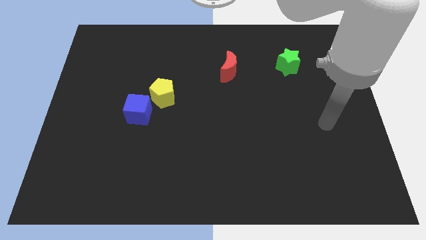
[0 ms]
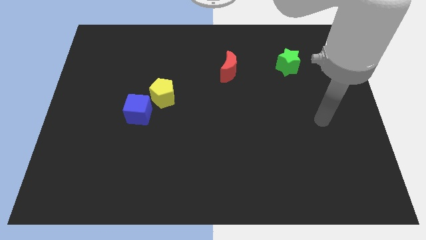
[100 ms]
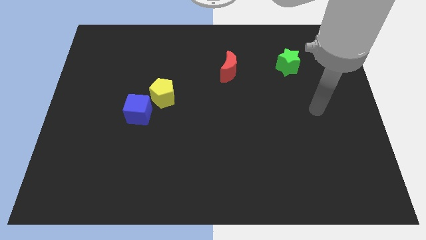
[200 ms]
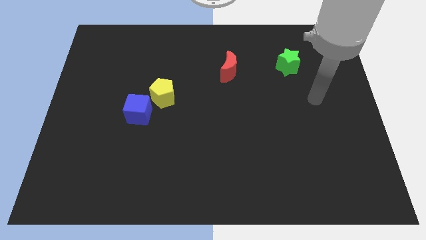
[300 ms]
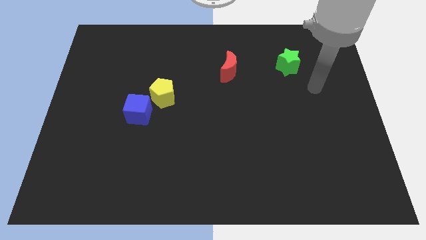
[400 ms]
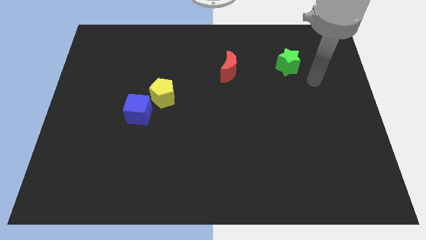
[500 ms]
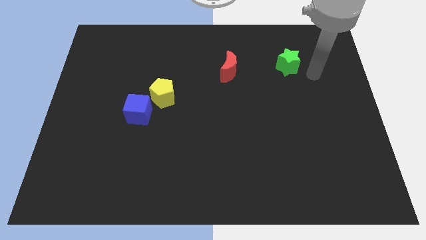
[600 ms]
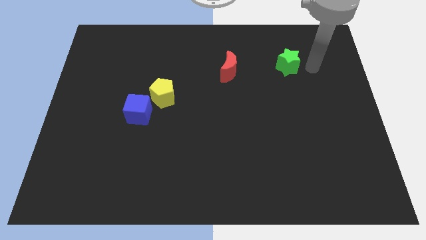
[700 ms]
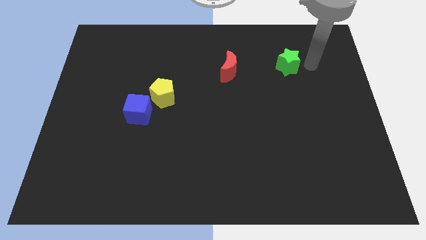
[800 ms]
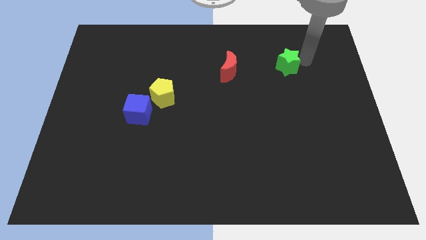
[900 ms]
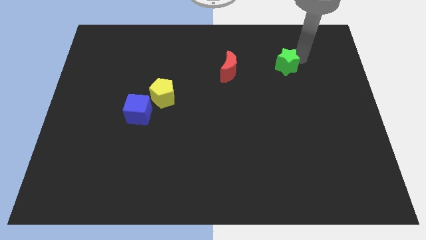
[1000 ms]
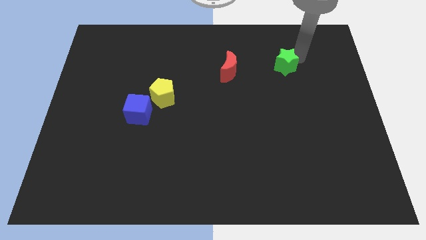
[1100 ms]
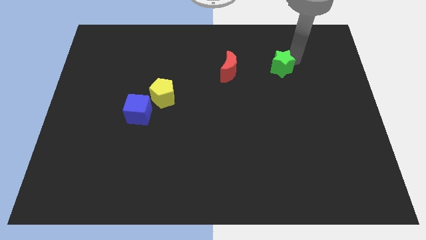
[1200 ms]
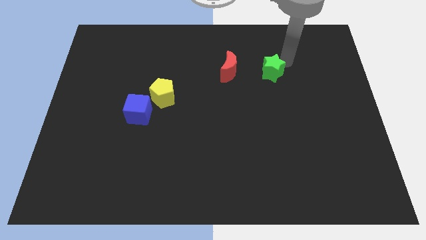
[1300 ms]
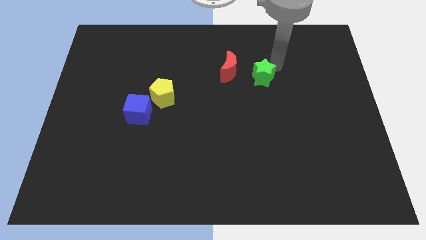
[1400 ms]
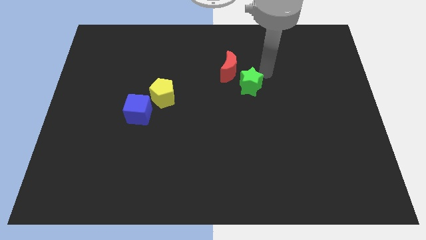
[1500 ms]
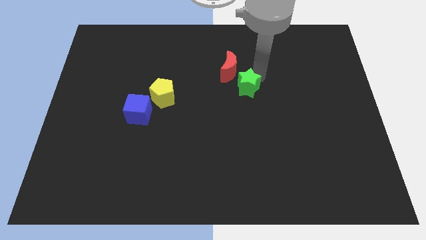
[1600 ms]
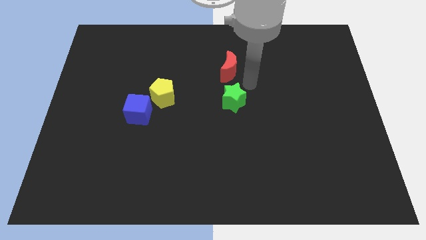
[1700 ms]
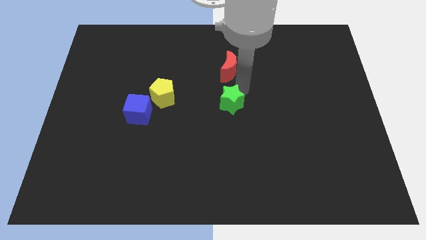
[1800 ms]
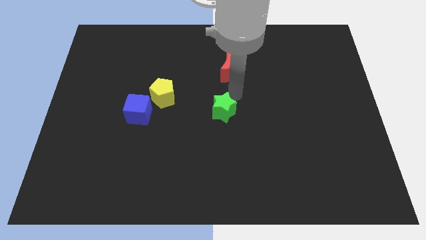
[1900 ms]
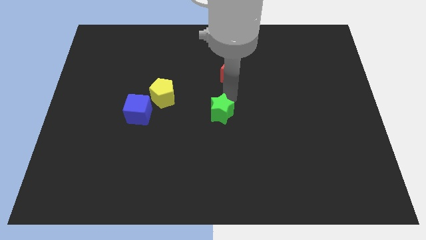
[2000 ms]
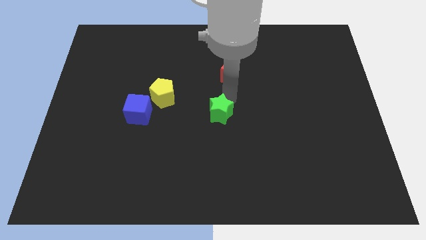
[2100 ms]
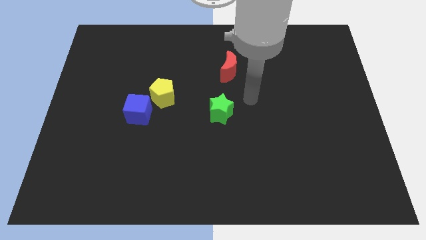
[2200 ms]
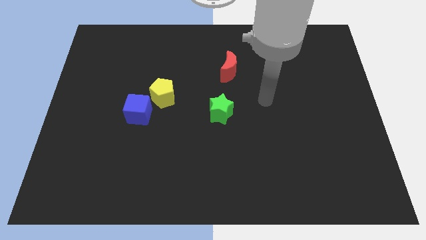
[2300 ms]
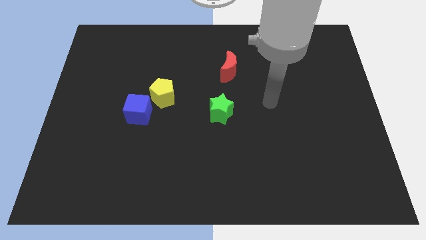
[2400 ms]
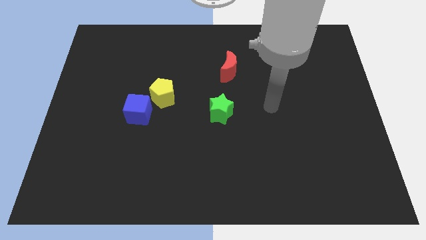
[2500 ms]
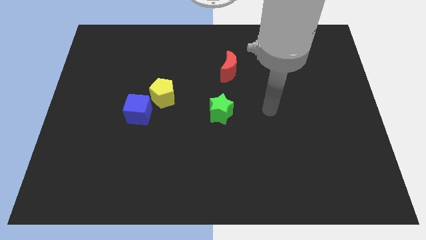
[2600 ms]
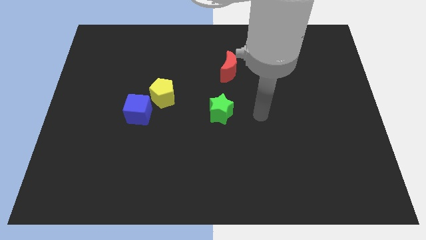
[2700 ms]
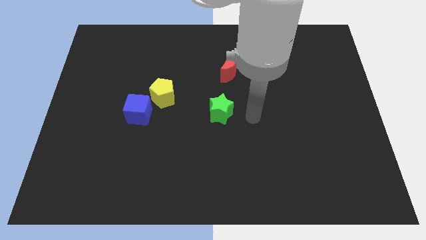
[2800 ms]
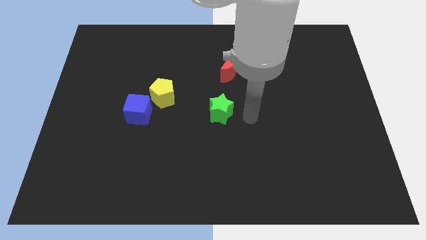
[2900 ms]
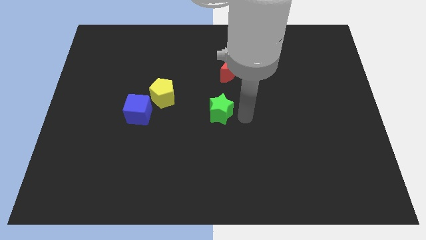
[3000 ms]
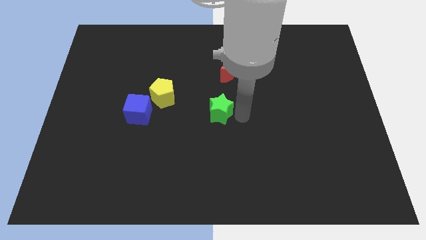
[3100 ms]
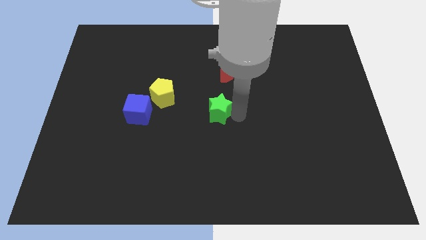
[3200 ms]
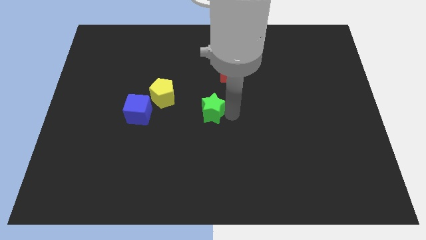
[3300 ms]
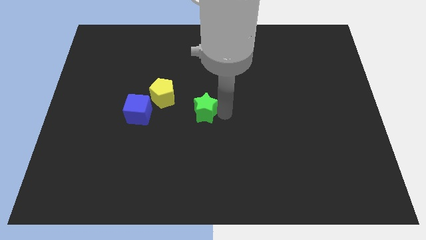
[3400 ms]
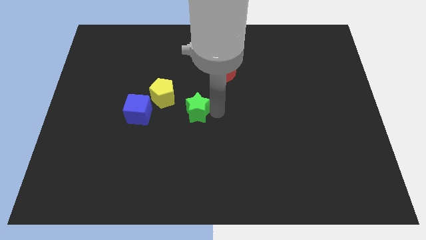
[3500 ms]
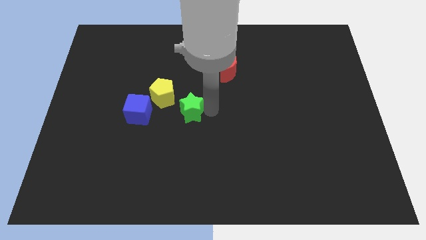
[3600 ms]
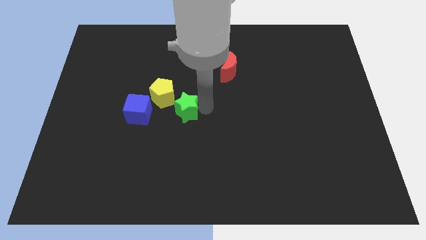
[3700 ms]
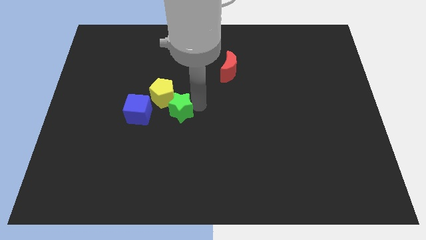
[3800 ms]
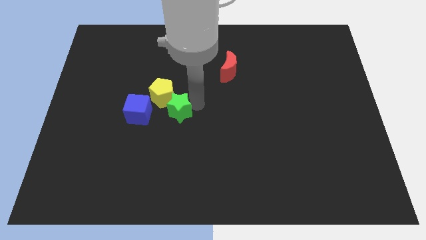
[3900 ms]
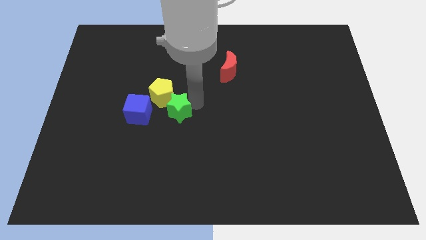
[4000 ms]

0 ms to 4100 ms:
put the green block towards the pentagon

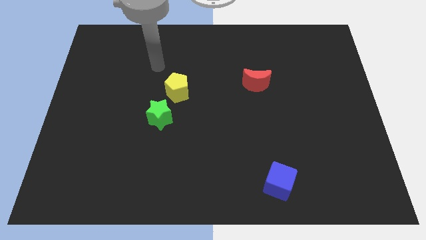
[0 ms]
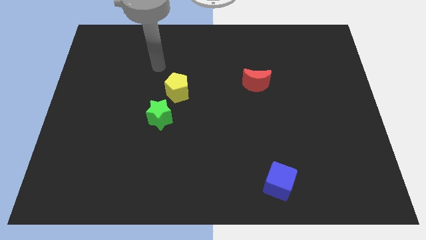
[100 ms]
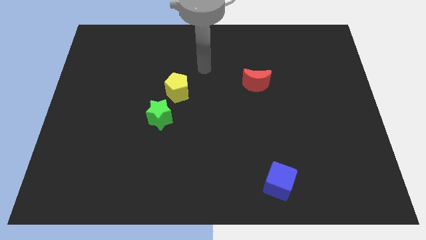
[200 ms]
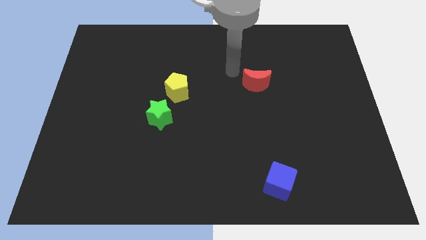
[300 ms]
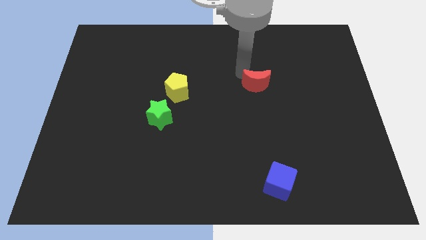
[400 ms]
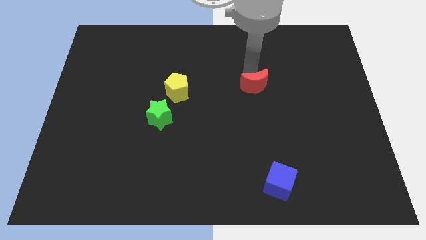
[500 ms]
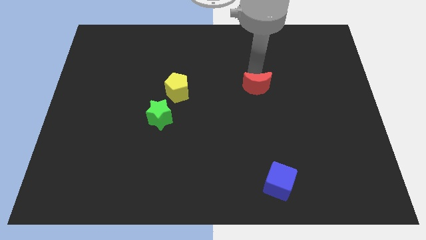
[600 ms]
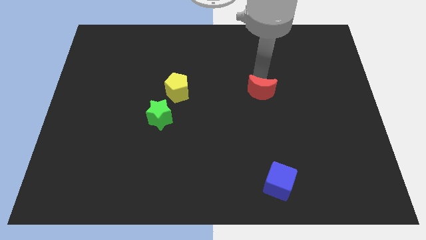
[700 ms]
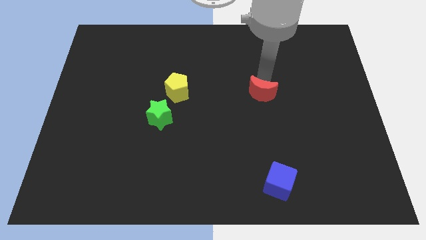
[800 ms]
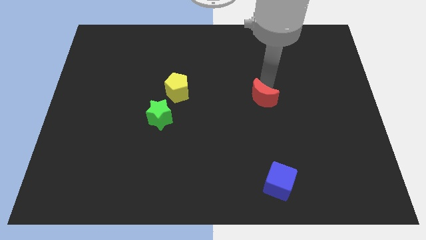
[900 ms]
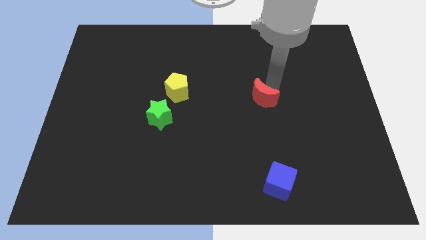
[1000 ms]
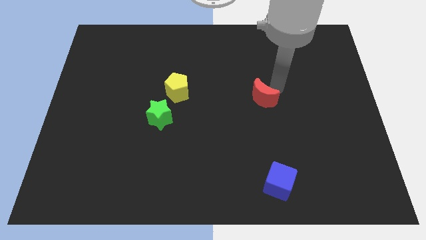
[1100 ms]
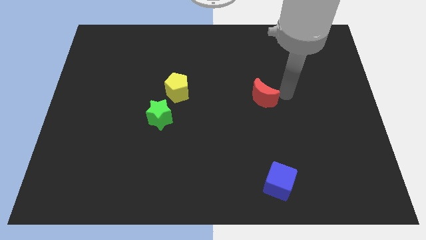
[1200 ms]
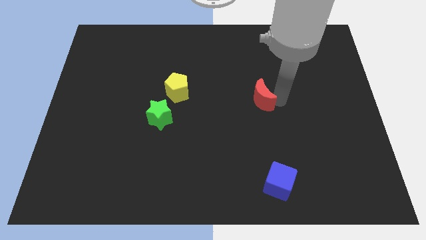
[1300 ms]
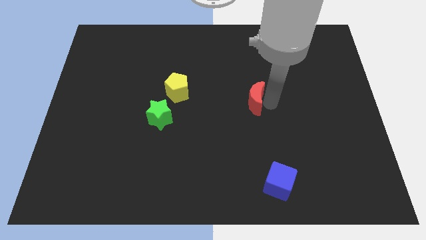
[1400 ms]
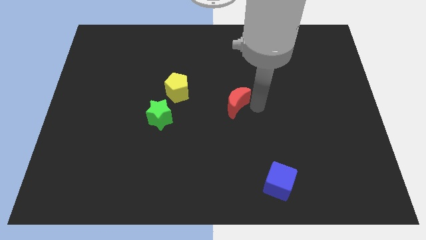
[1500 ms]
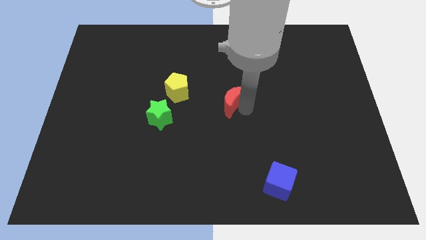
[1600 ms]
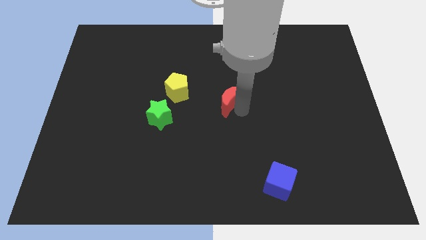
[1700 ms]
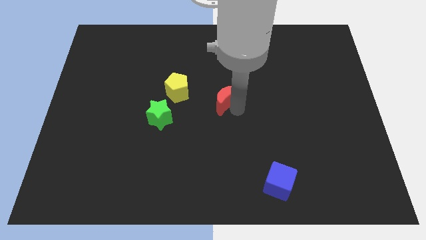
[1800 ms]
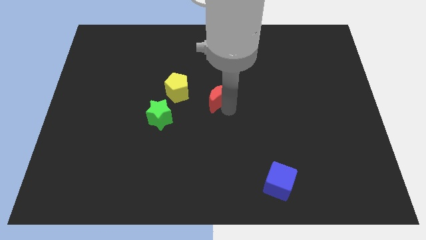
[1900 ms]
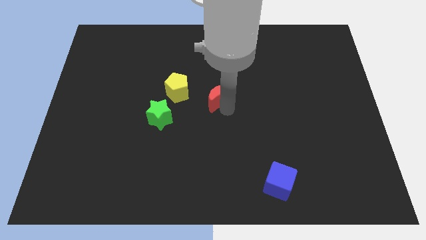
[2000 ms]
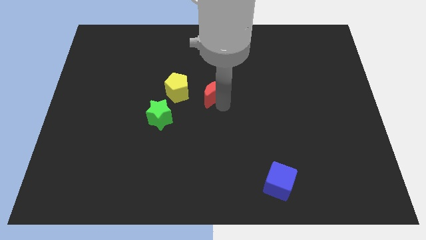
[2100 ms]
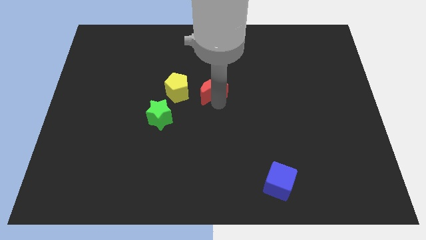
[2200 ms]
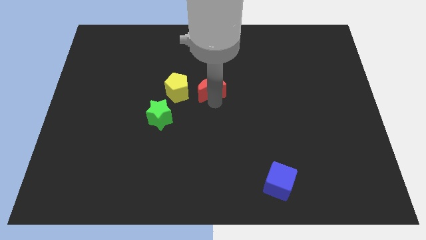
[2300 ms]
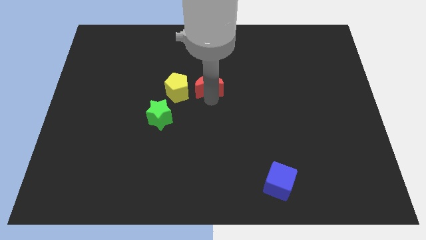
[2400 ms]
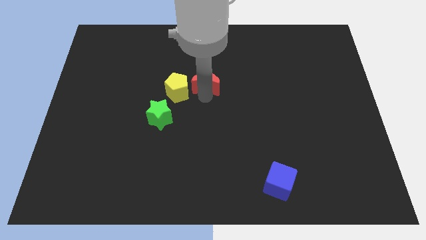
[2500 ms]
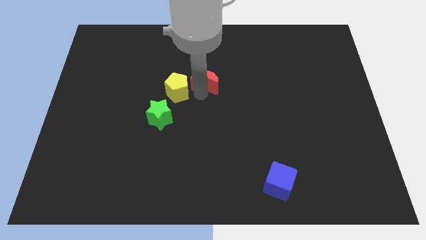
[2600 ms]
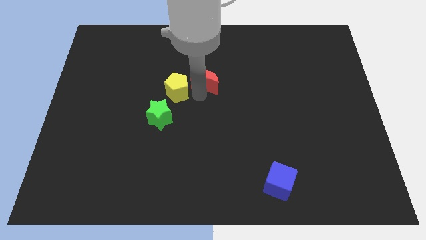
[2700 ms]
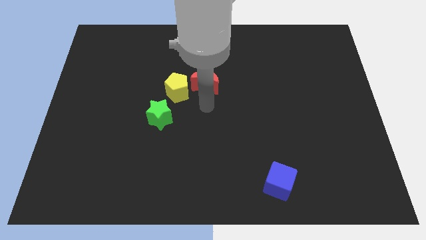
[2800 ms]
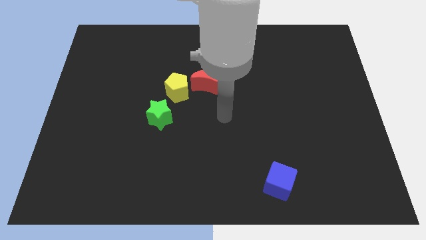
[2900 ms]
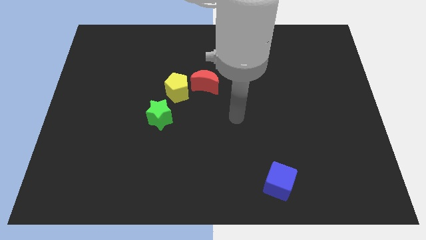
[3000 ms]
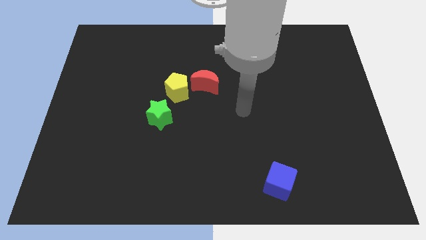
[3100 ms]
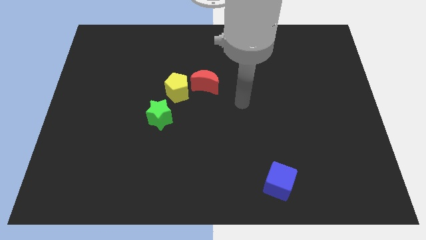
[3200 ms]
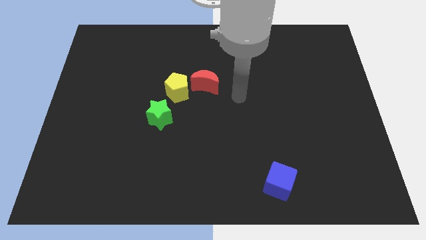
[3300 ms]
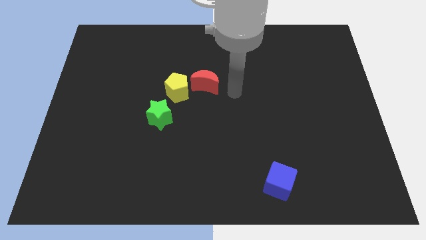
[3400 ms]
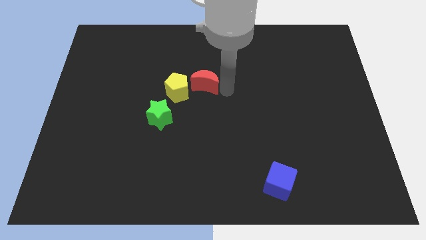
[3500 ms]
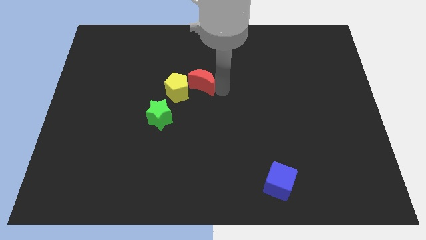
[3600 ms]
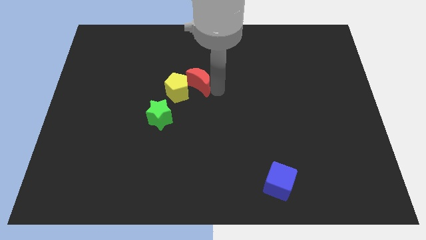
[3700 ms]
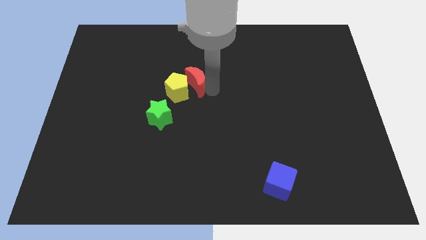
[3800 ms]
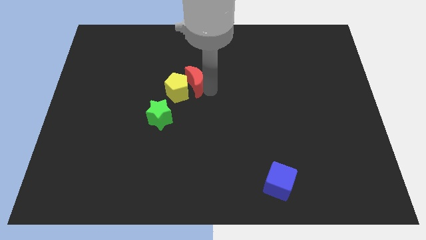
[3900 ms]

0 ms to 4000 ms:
slide the red moon next to the yellow pentagon
